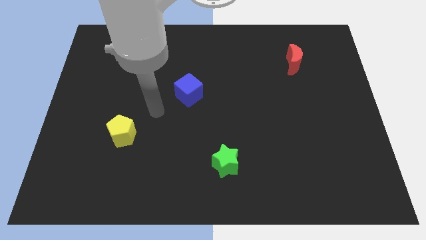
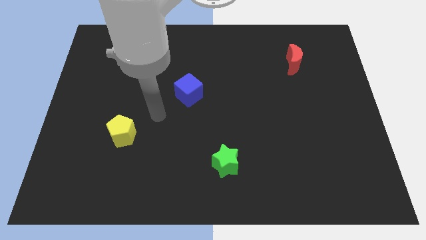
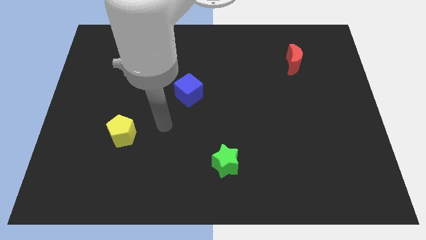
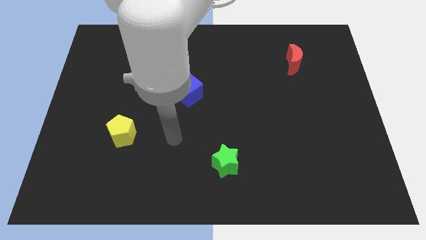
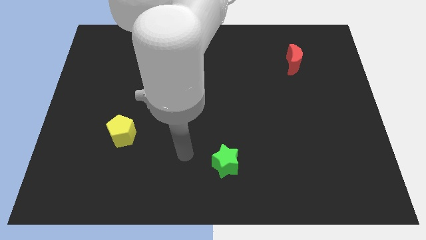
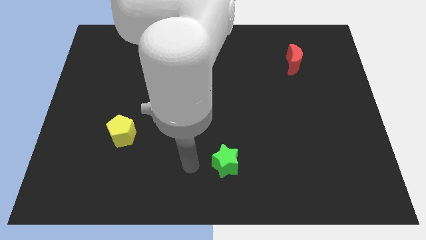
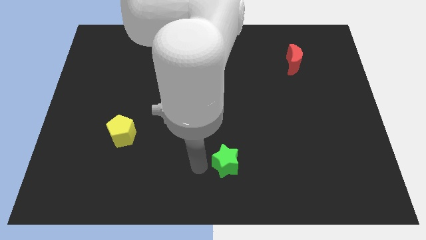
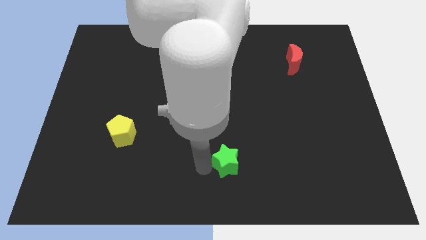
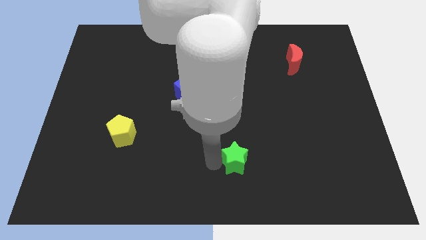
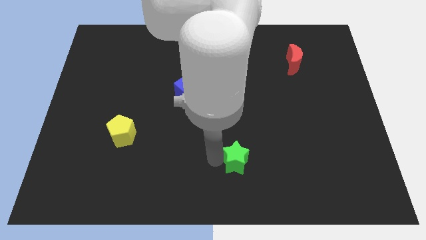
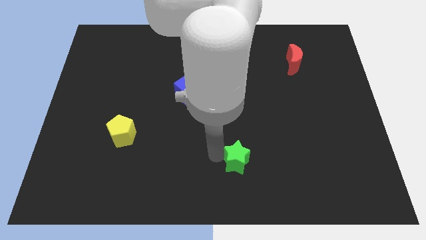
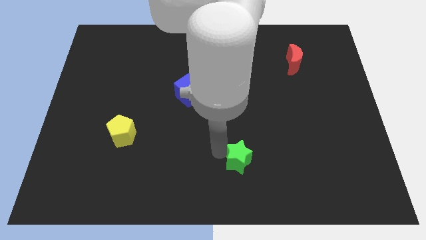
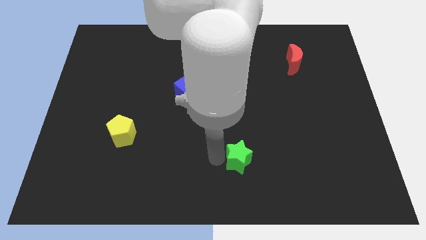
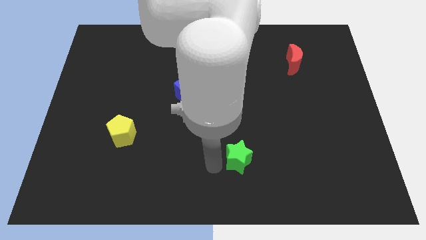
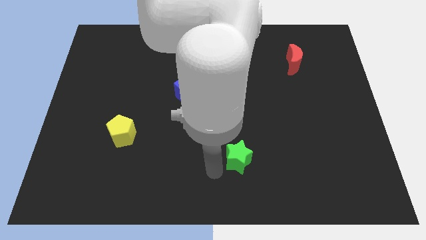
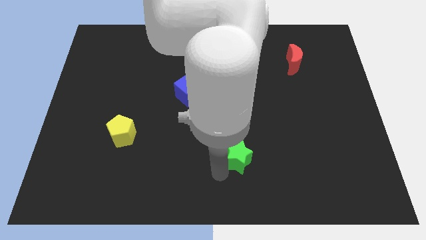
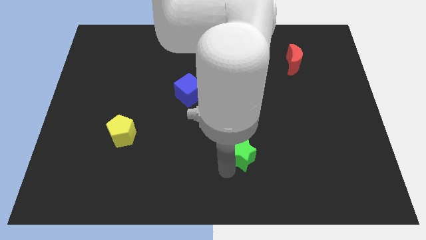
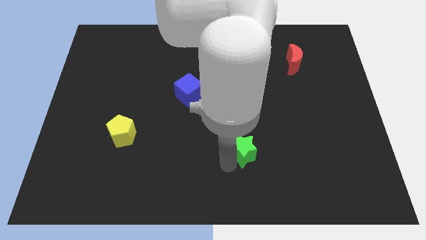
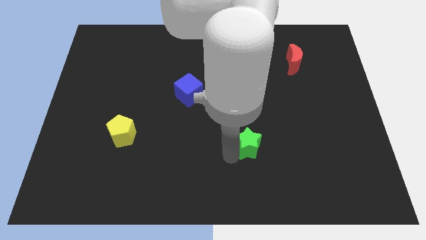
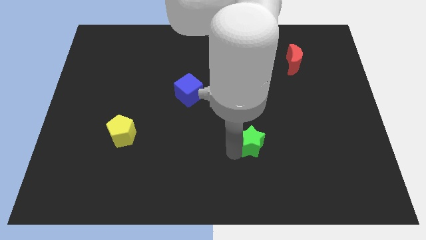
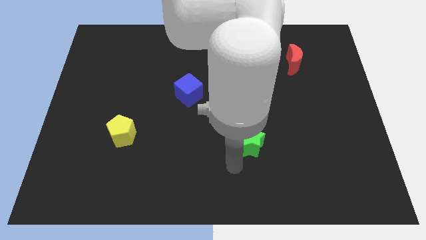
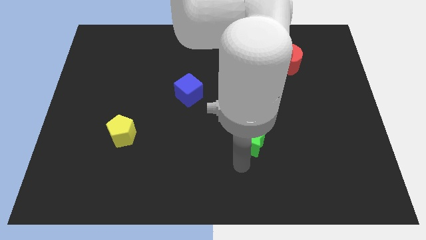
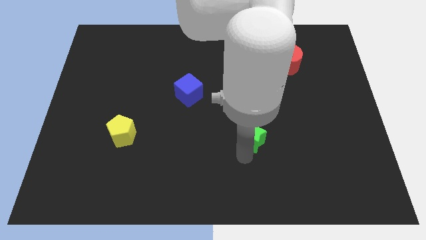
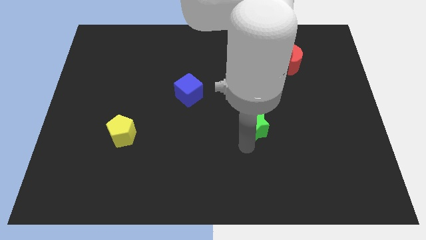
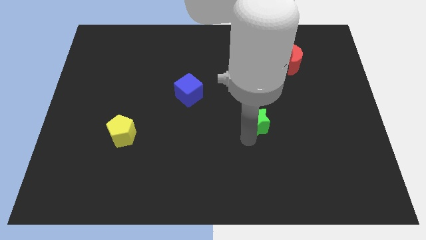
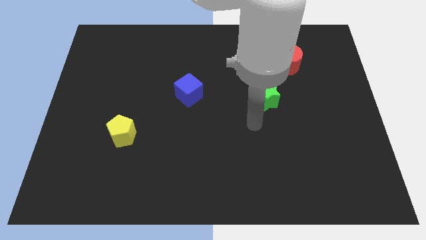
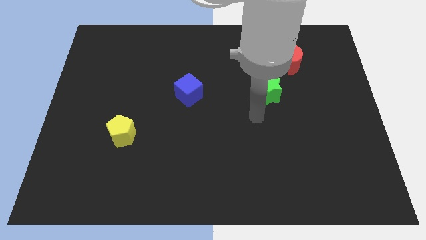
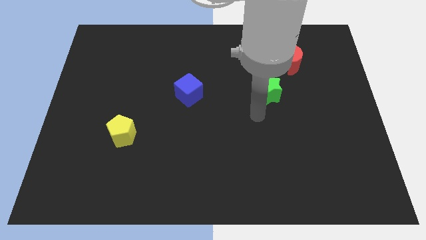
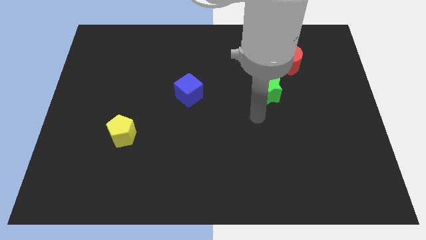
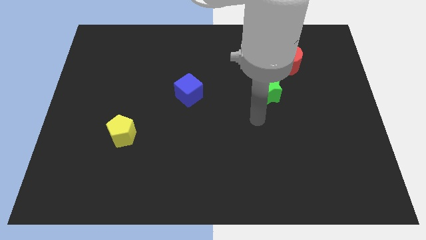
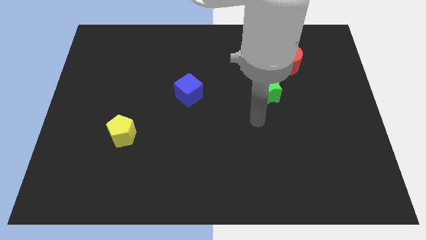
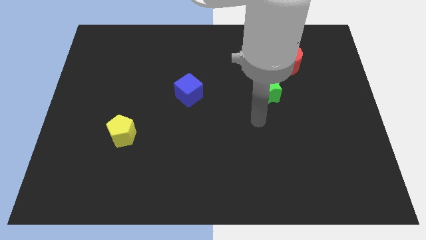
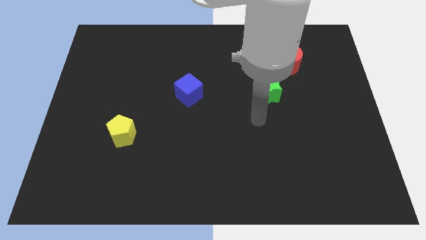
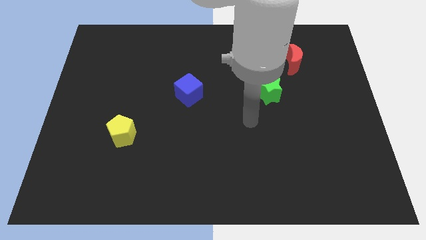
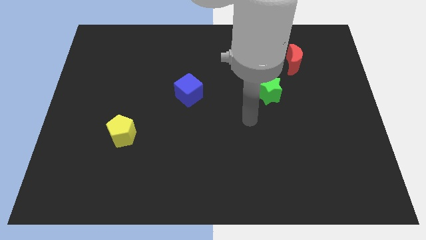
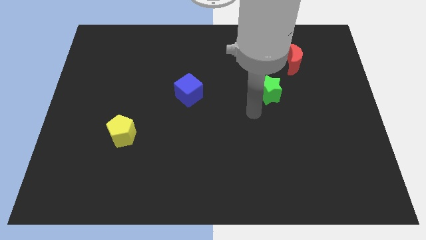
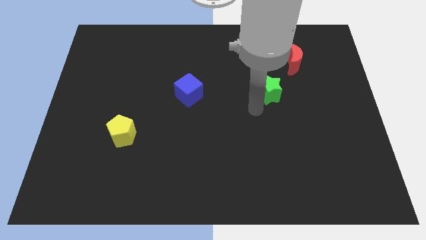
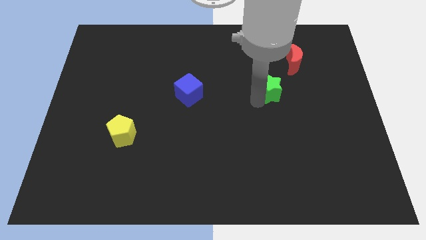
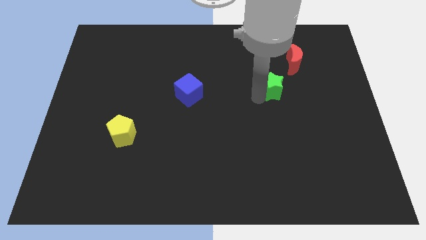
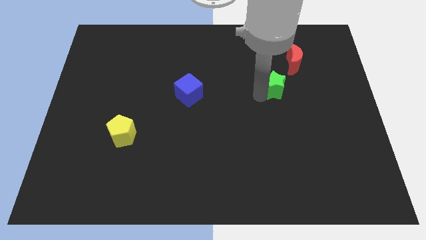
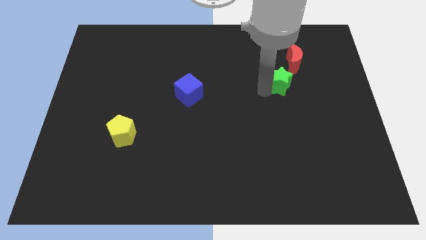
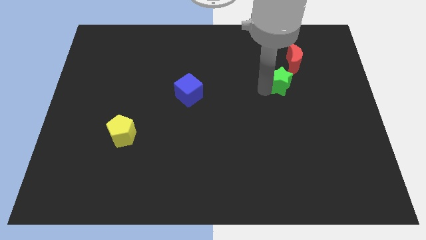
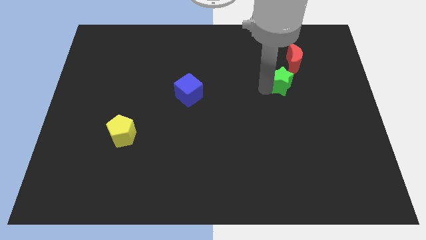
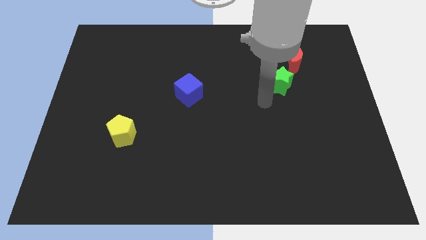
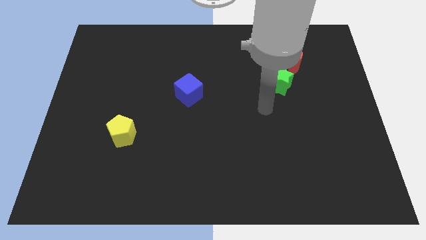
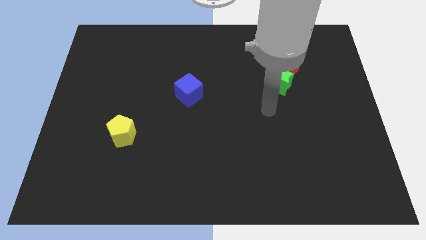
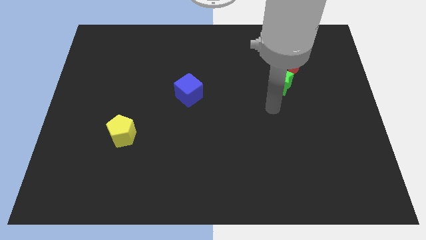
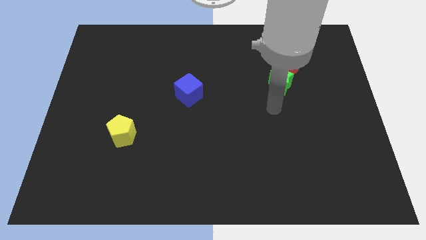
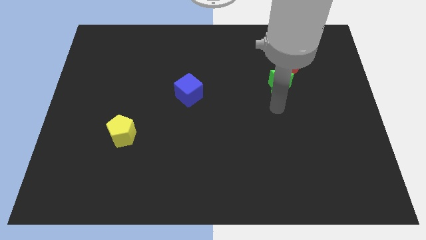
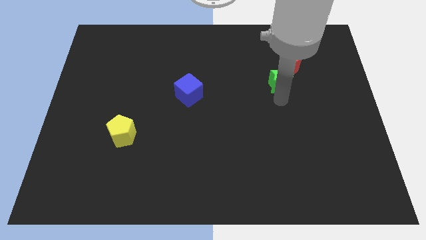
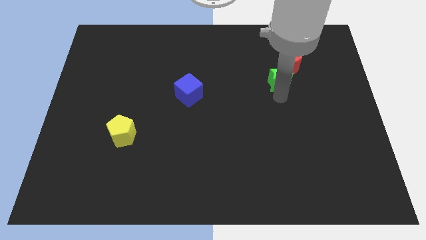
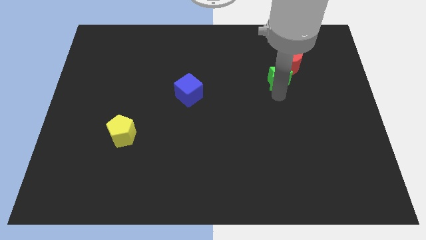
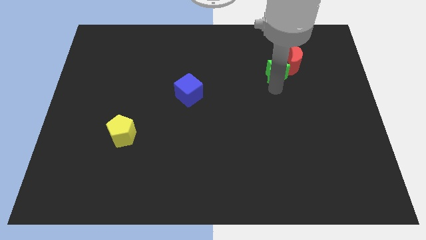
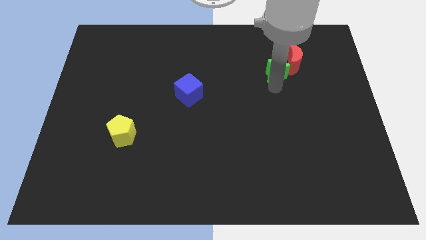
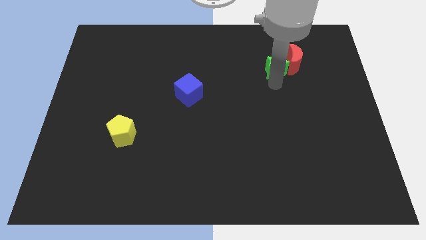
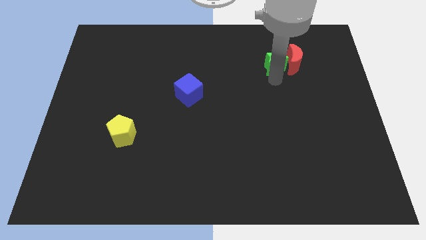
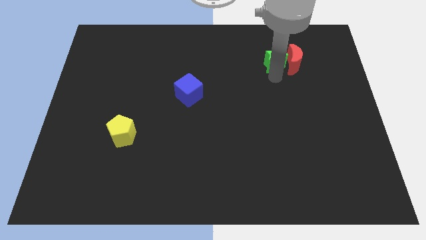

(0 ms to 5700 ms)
slide the green block to the red moon

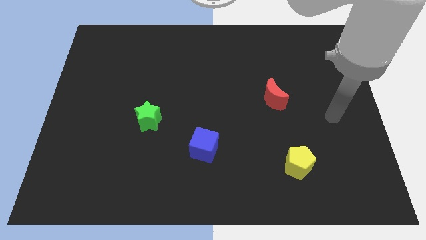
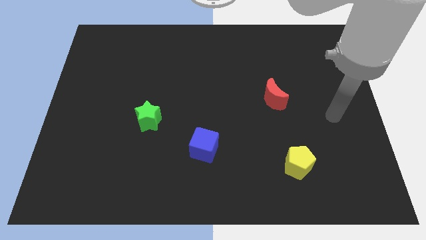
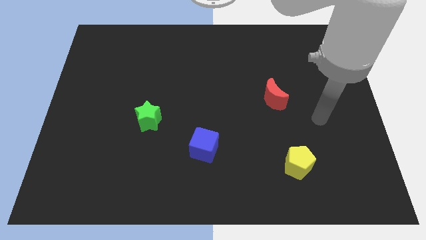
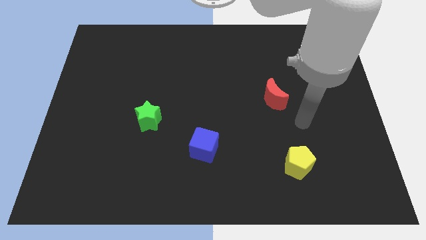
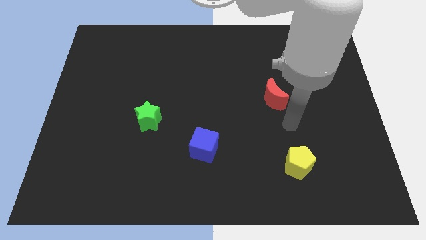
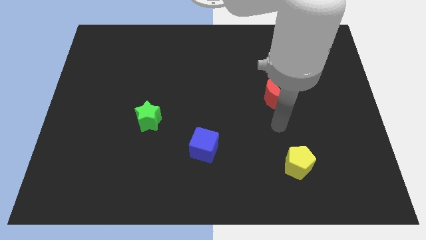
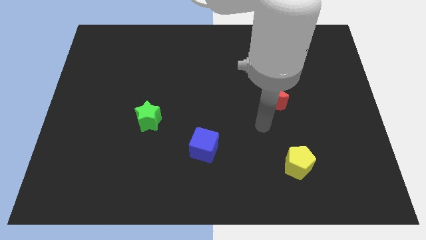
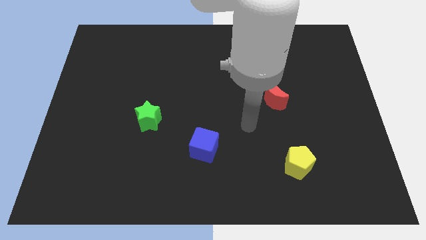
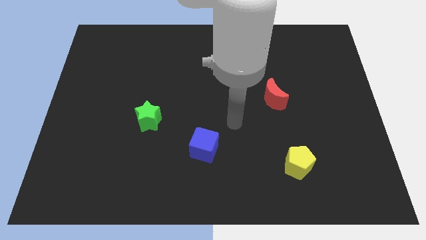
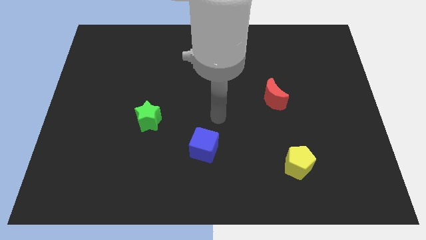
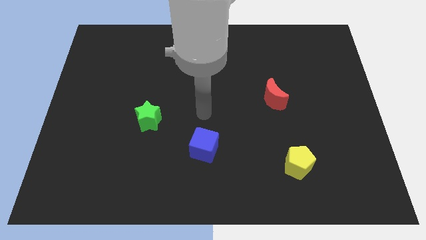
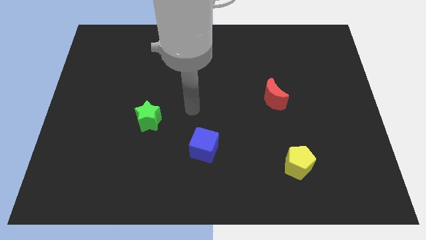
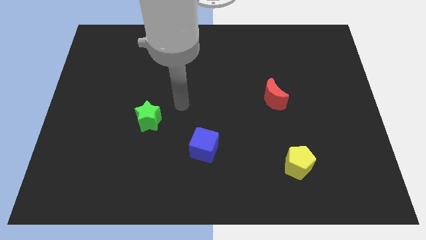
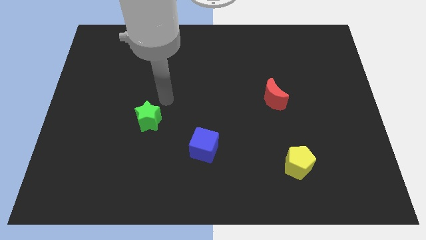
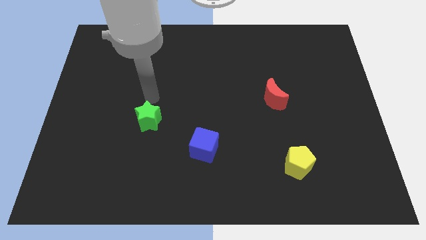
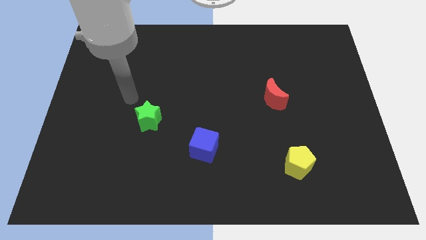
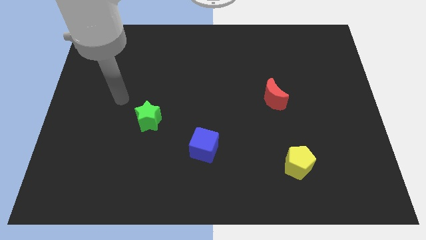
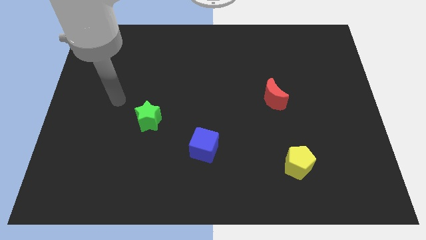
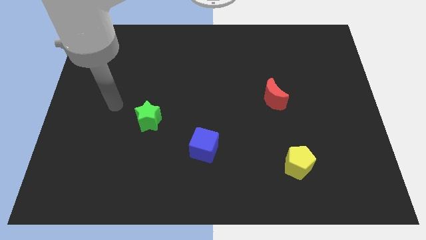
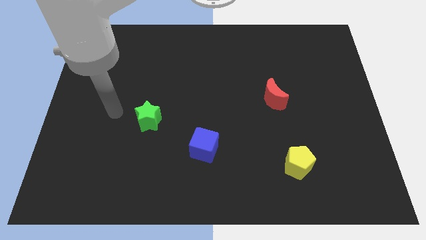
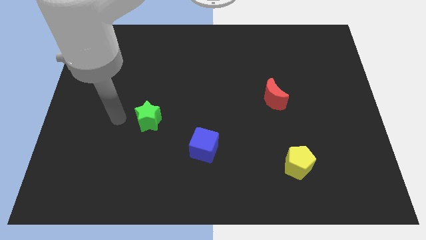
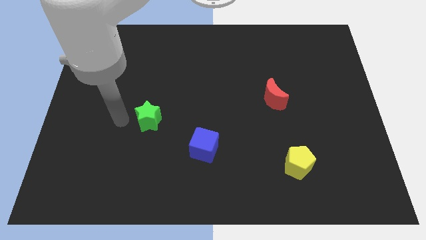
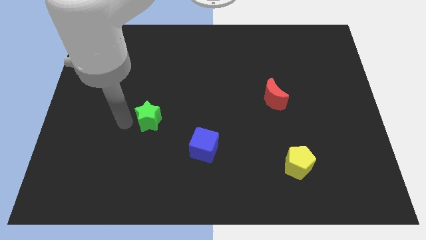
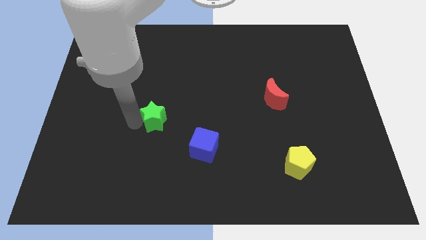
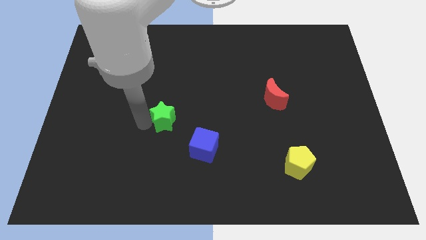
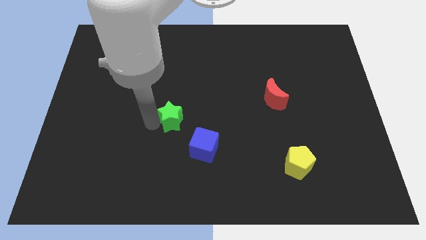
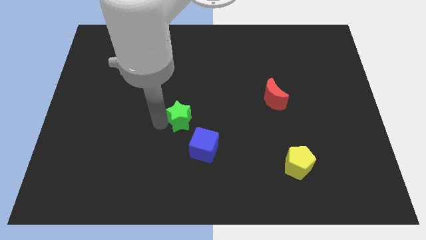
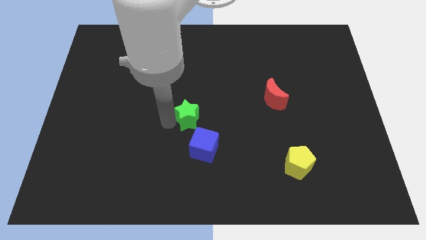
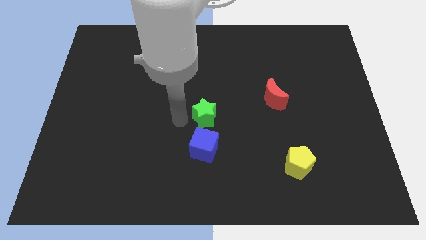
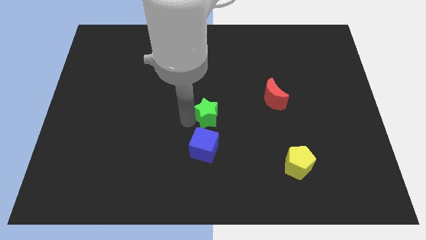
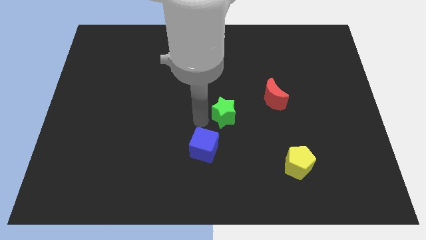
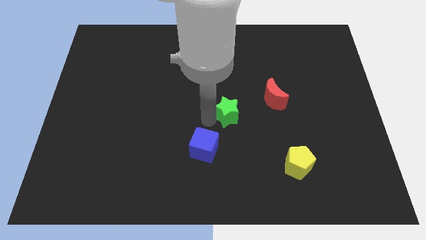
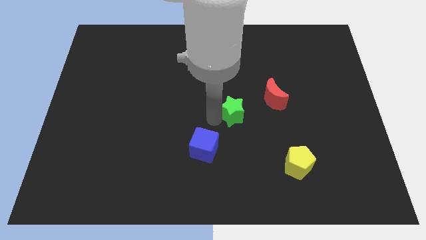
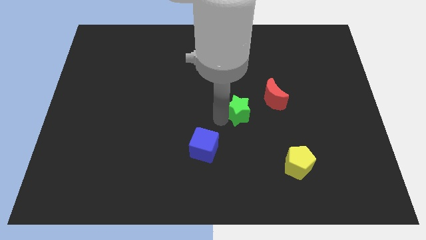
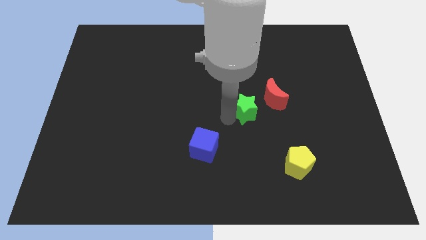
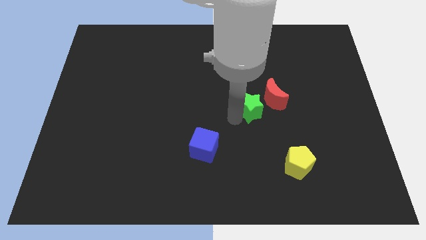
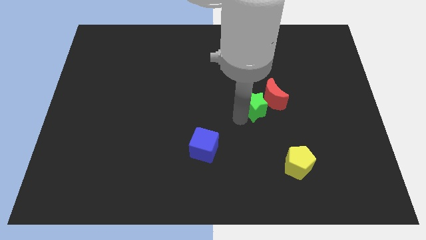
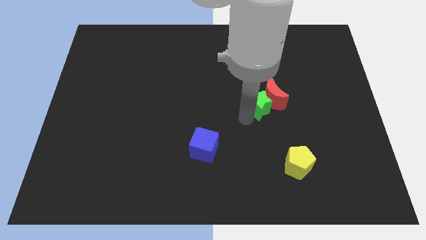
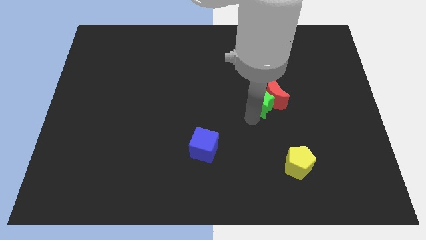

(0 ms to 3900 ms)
slide the green block towards the red block
